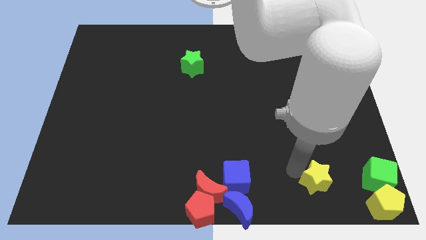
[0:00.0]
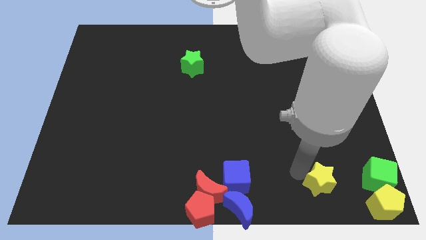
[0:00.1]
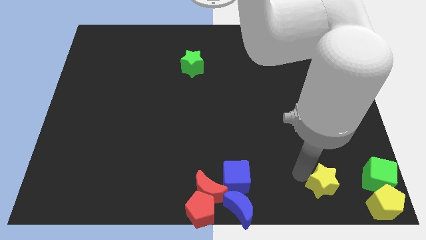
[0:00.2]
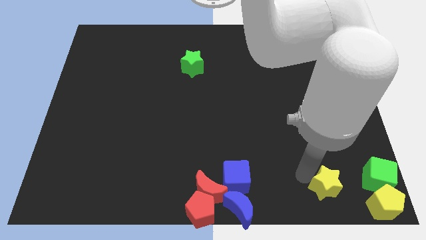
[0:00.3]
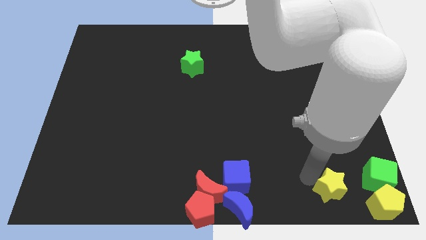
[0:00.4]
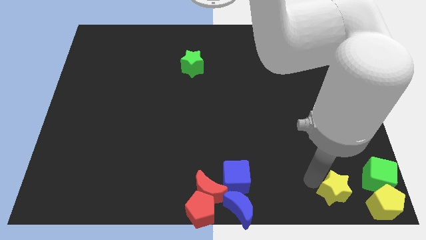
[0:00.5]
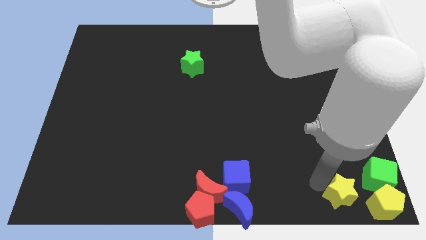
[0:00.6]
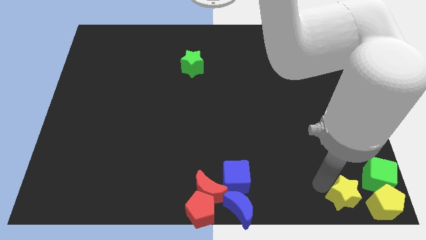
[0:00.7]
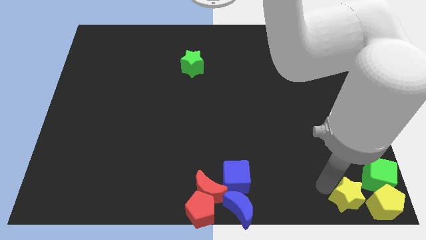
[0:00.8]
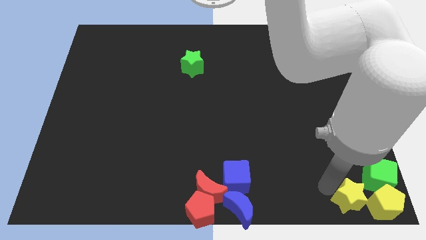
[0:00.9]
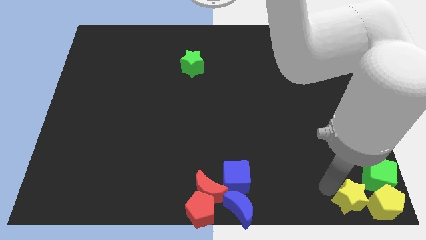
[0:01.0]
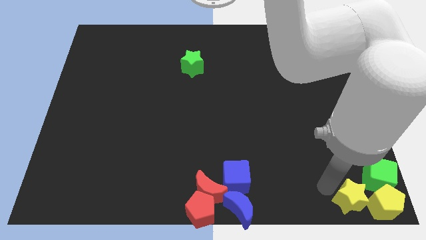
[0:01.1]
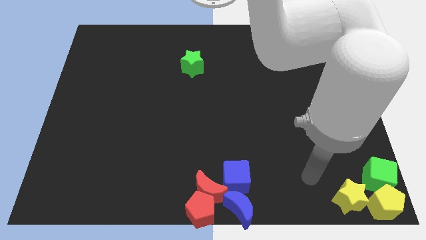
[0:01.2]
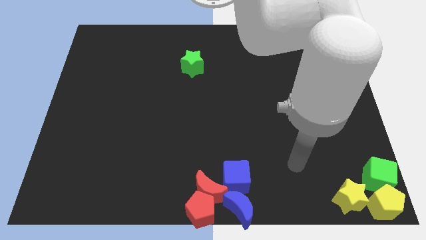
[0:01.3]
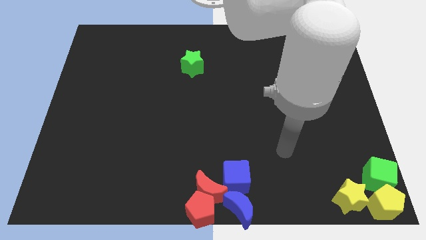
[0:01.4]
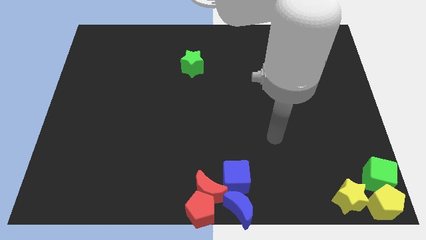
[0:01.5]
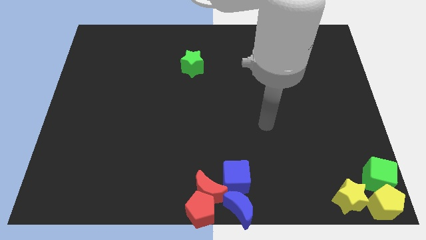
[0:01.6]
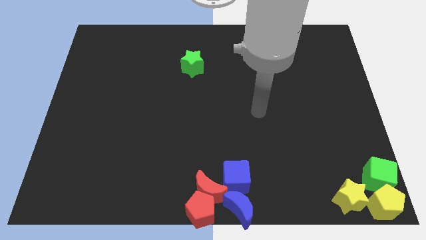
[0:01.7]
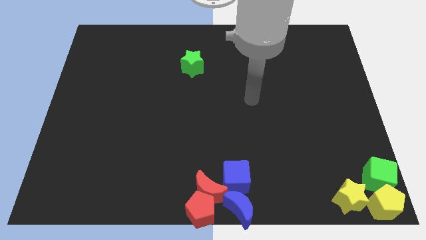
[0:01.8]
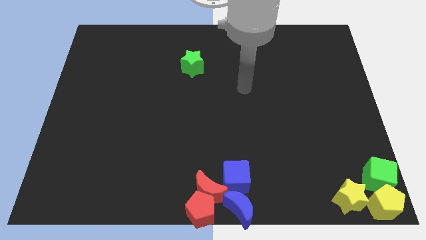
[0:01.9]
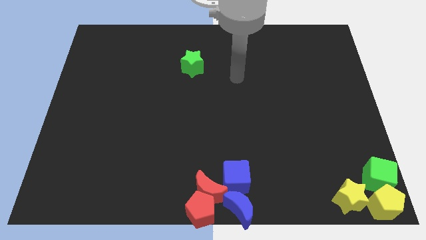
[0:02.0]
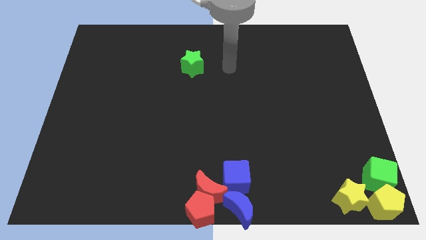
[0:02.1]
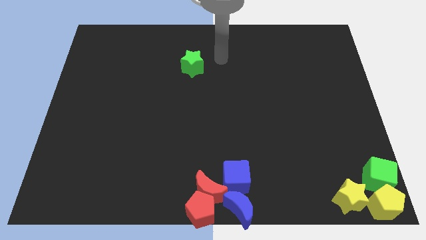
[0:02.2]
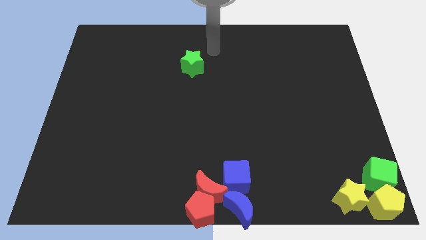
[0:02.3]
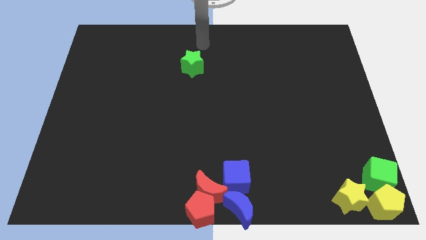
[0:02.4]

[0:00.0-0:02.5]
move the yellow star close to the left side of the yellow pentagon and go away

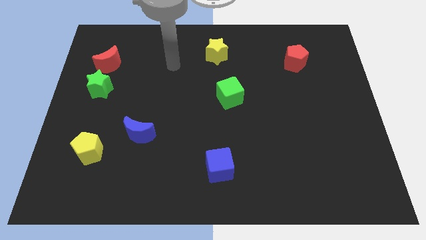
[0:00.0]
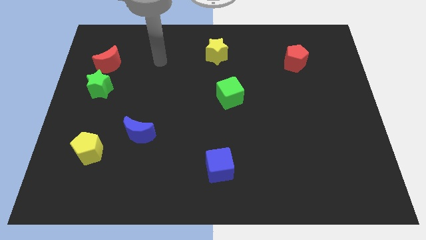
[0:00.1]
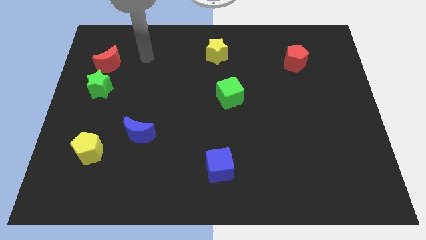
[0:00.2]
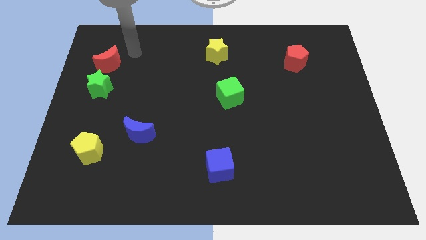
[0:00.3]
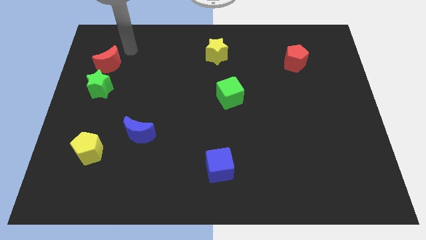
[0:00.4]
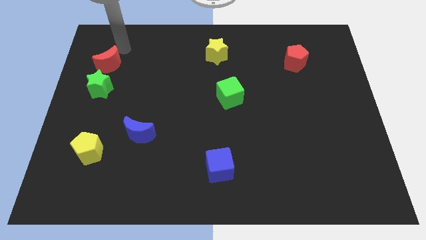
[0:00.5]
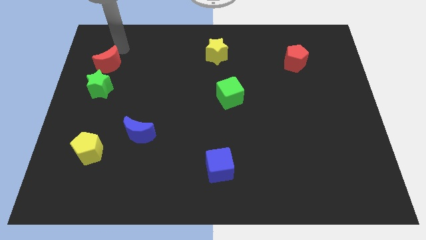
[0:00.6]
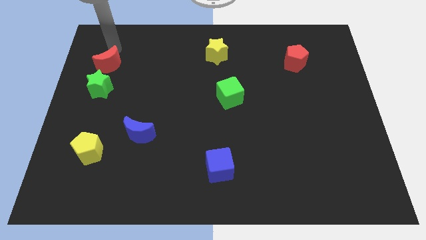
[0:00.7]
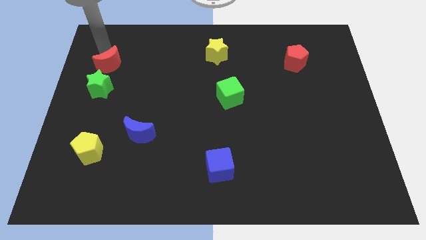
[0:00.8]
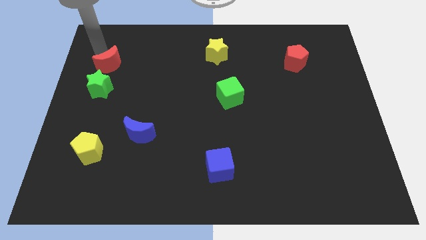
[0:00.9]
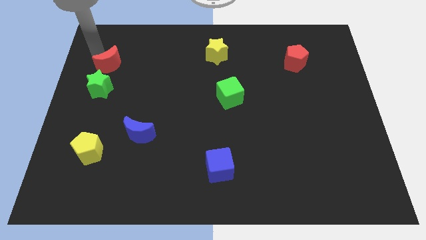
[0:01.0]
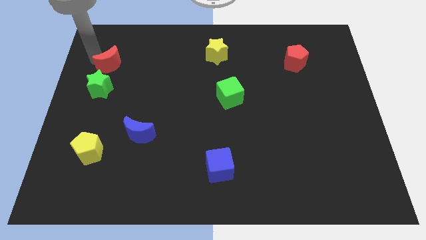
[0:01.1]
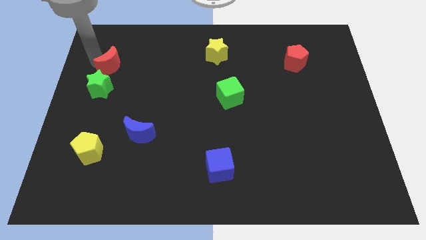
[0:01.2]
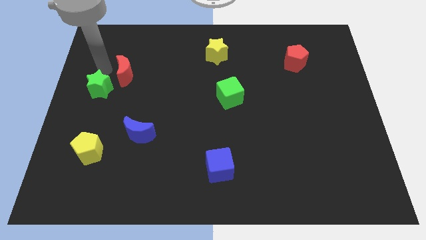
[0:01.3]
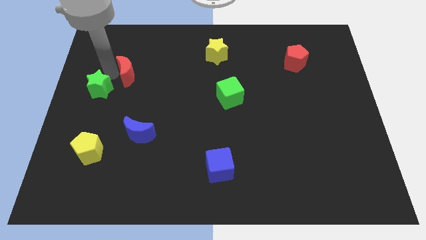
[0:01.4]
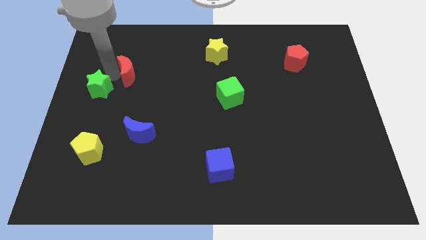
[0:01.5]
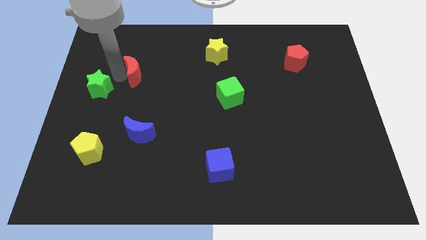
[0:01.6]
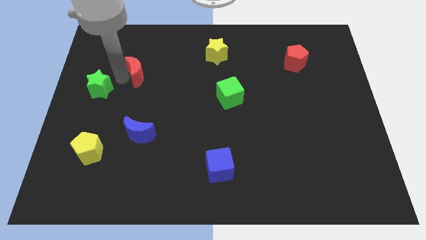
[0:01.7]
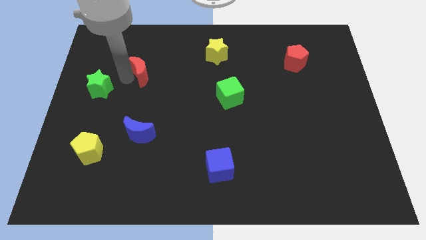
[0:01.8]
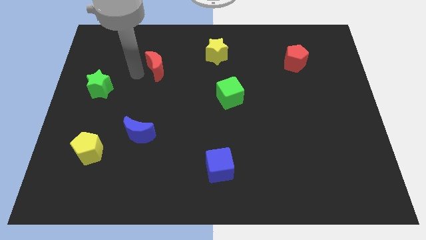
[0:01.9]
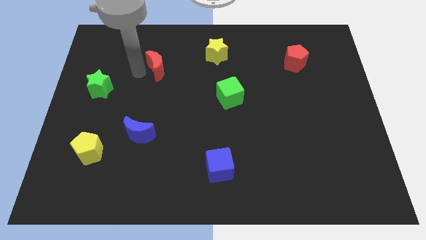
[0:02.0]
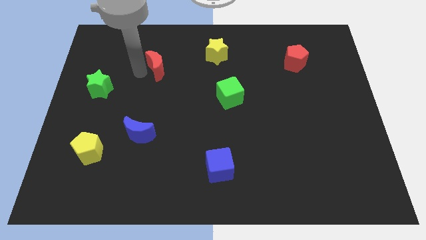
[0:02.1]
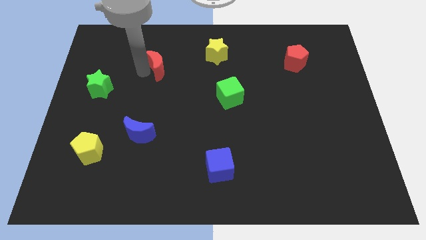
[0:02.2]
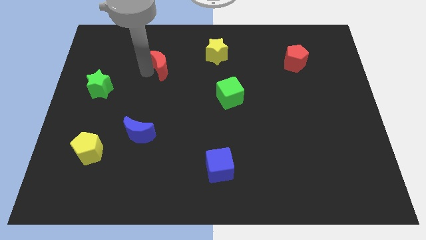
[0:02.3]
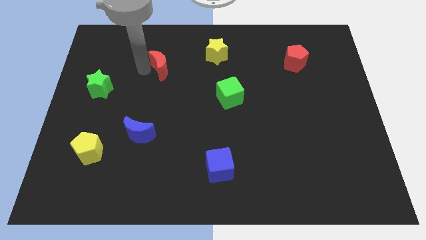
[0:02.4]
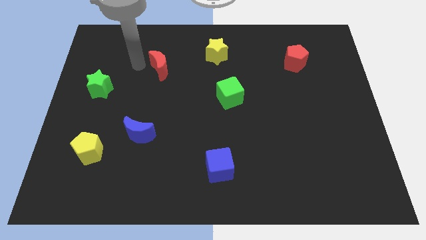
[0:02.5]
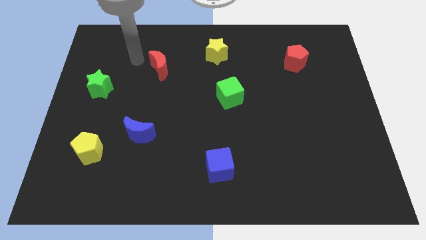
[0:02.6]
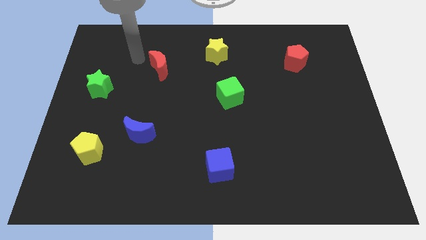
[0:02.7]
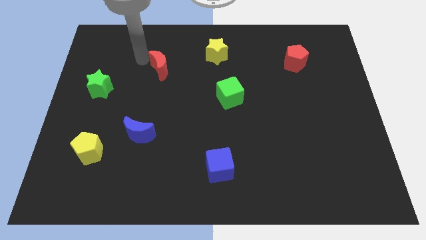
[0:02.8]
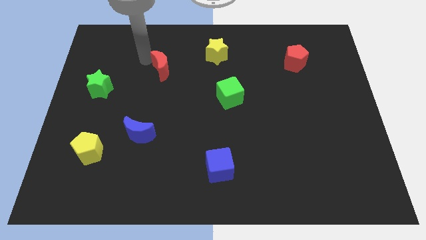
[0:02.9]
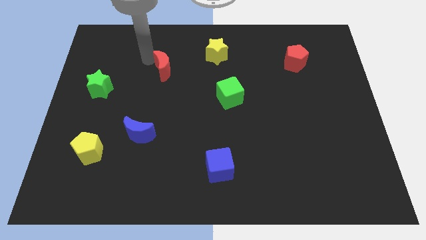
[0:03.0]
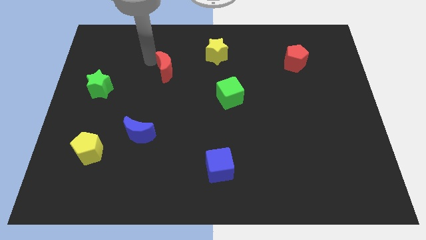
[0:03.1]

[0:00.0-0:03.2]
put the red crescent diagonally in between both the stars

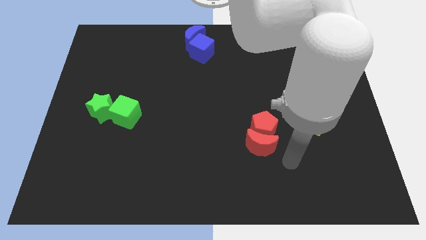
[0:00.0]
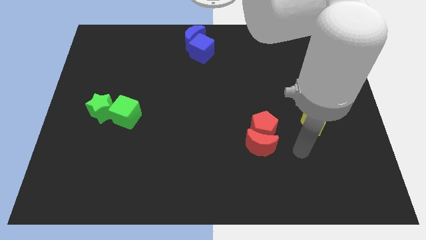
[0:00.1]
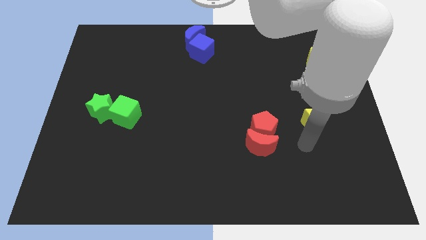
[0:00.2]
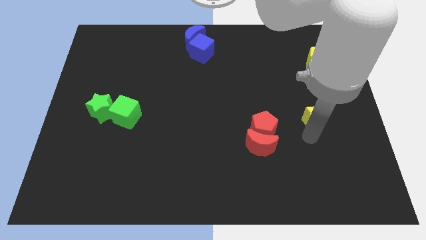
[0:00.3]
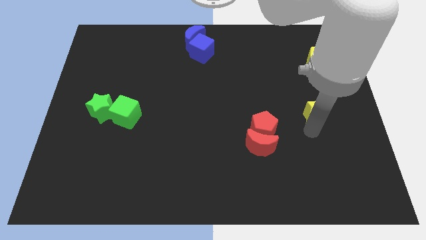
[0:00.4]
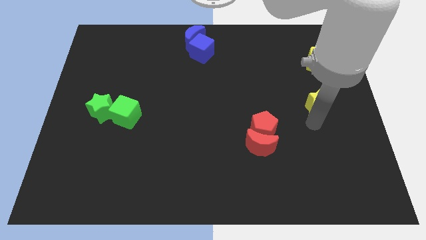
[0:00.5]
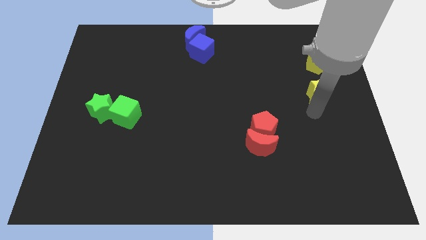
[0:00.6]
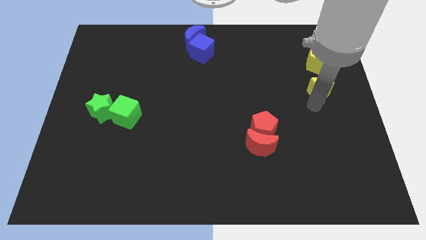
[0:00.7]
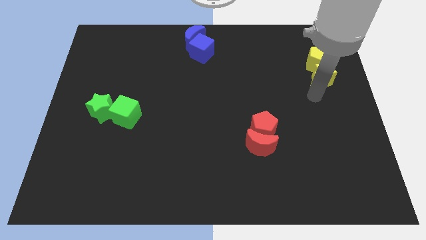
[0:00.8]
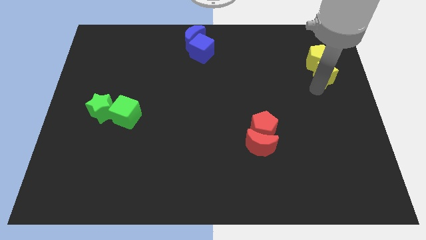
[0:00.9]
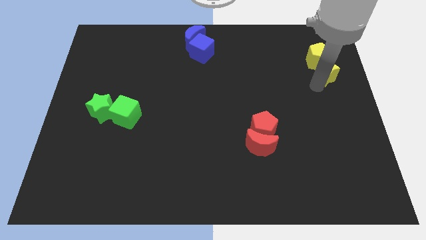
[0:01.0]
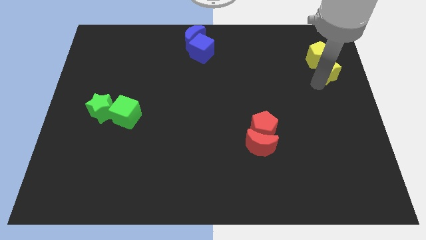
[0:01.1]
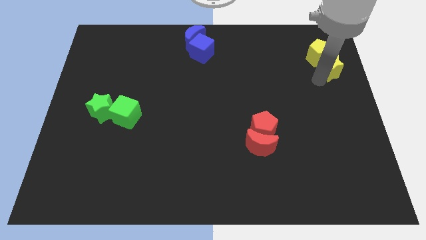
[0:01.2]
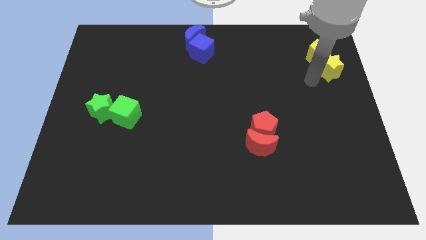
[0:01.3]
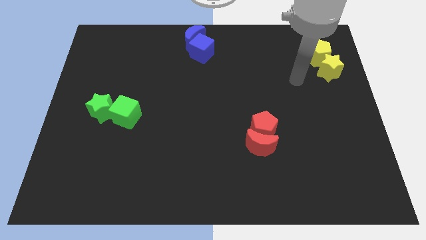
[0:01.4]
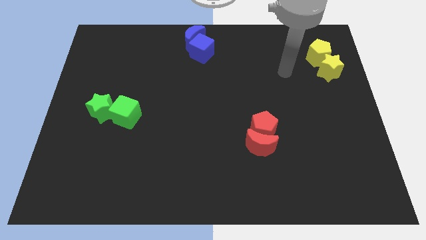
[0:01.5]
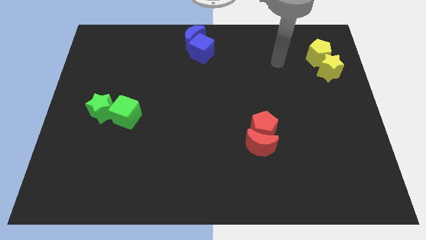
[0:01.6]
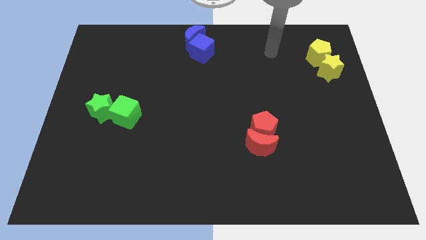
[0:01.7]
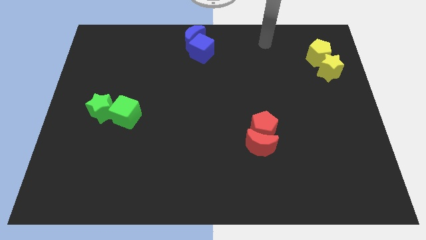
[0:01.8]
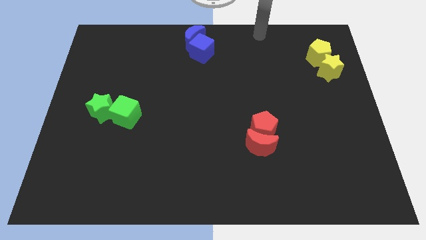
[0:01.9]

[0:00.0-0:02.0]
push the yellow star into yellow pentagon

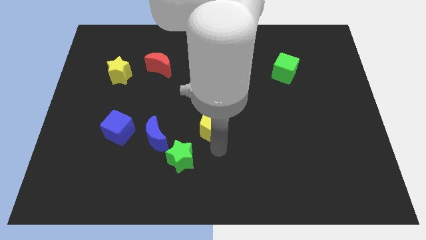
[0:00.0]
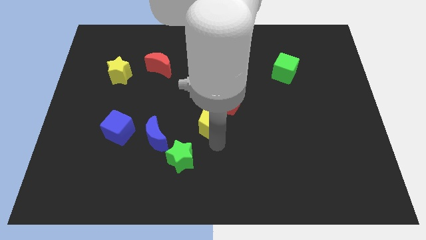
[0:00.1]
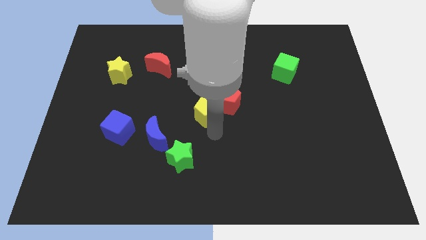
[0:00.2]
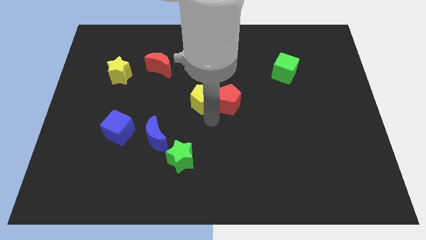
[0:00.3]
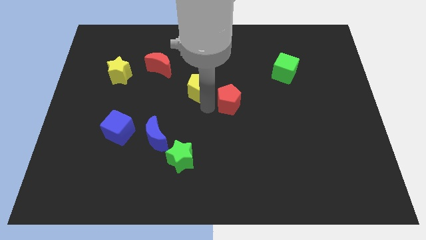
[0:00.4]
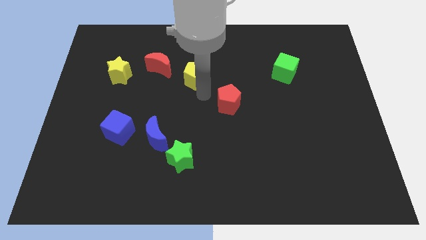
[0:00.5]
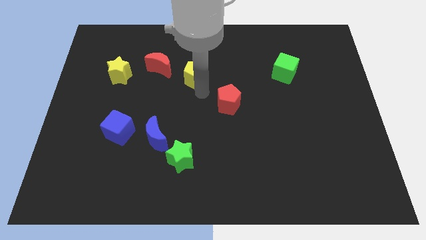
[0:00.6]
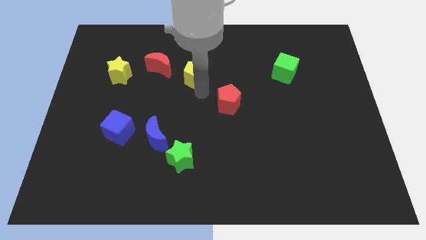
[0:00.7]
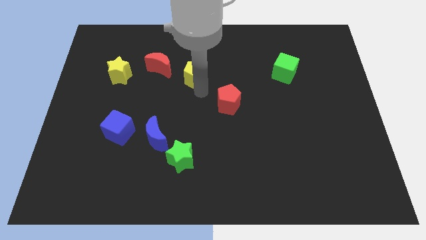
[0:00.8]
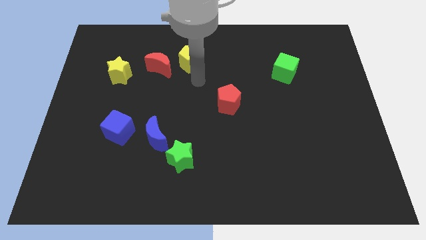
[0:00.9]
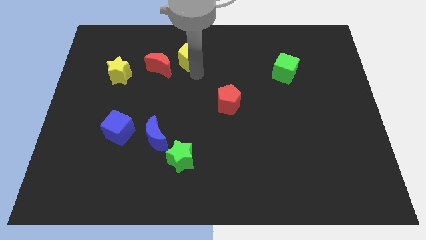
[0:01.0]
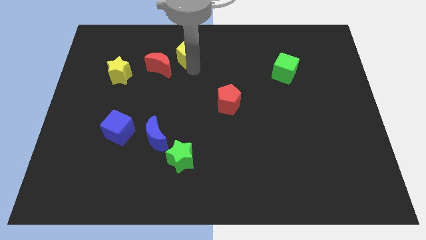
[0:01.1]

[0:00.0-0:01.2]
move the yellow pentagon right to the red crescent

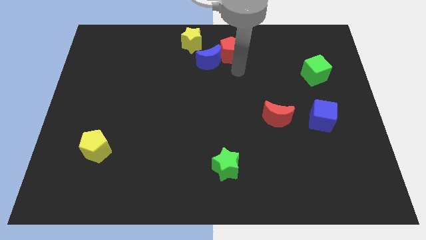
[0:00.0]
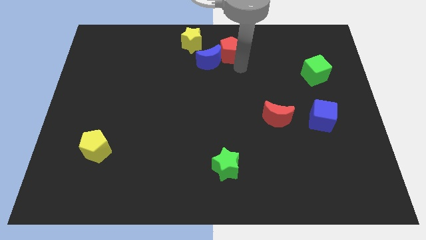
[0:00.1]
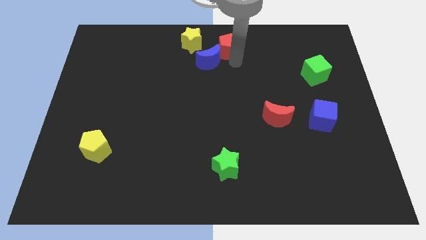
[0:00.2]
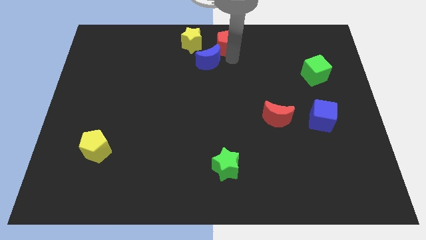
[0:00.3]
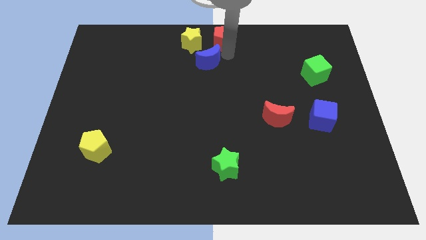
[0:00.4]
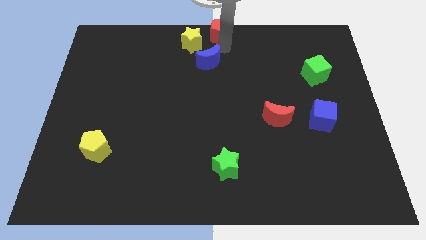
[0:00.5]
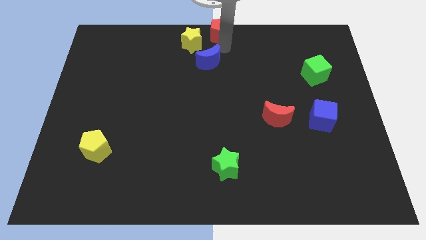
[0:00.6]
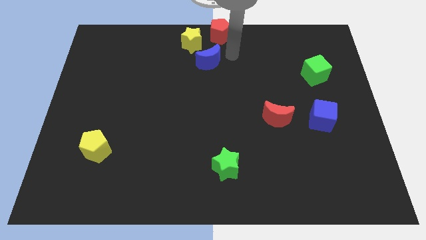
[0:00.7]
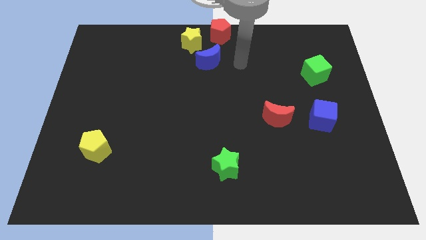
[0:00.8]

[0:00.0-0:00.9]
push the red pentagon to the top center of the board
